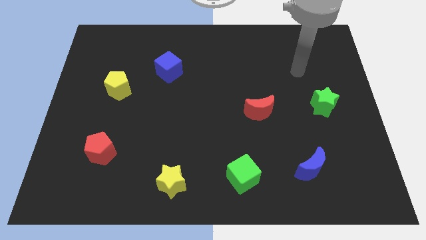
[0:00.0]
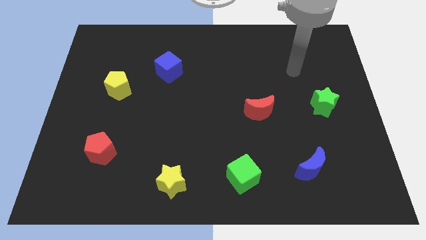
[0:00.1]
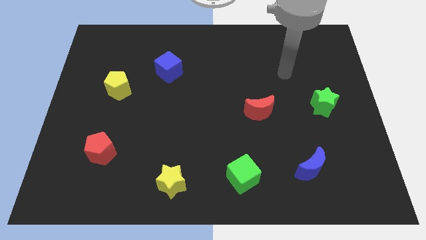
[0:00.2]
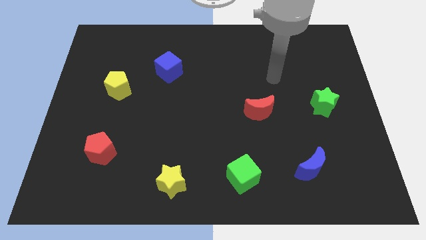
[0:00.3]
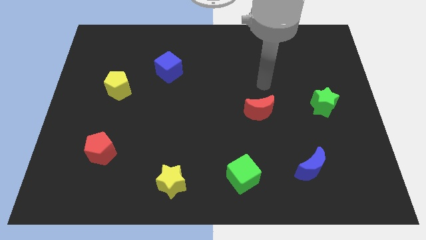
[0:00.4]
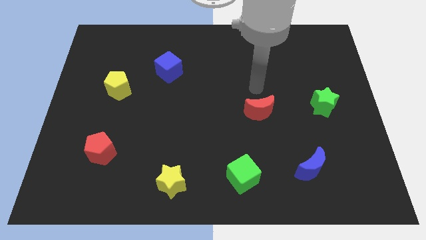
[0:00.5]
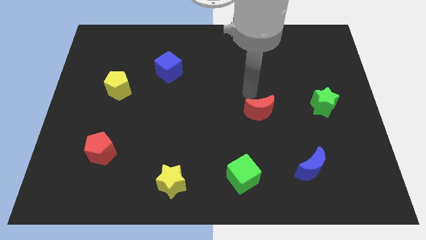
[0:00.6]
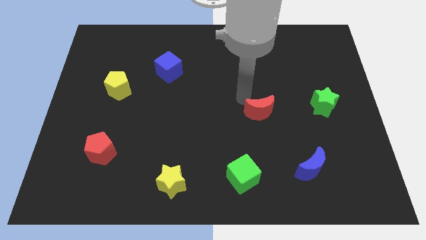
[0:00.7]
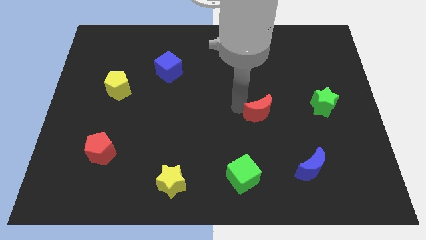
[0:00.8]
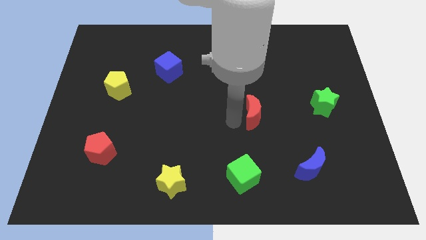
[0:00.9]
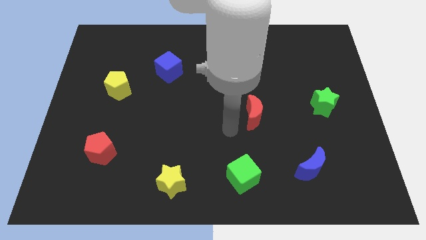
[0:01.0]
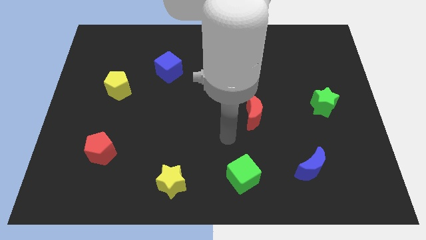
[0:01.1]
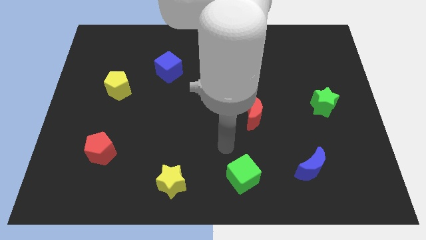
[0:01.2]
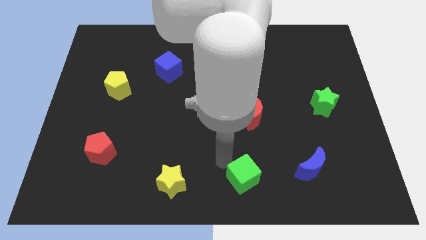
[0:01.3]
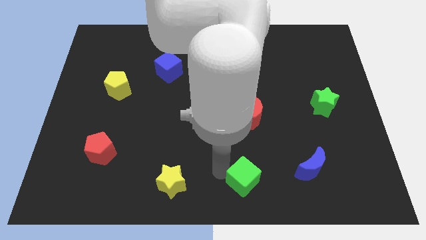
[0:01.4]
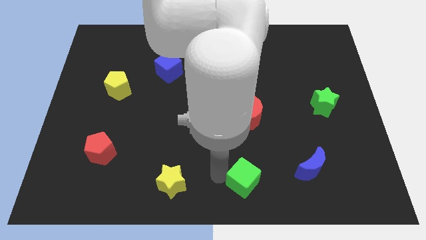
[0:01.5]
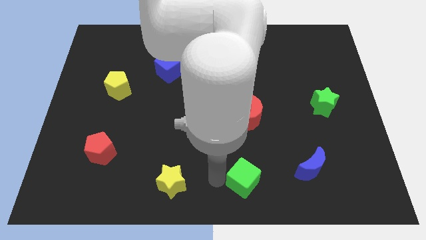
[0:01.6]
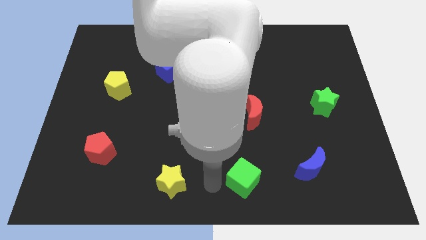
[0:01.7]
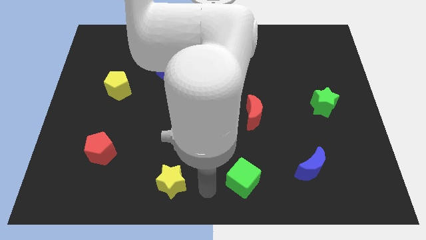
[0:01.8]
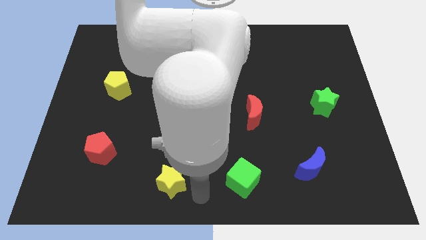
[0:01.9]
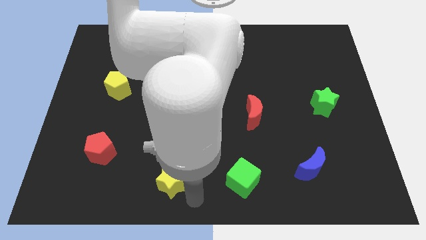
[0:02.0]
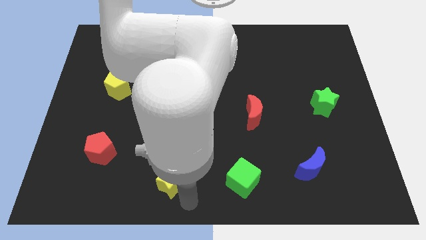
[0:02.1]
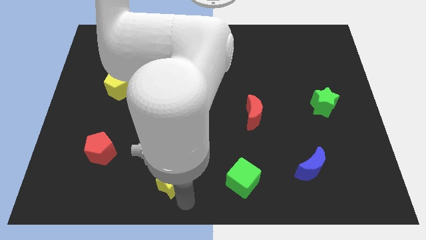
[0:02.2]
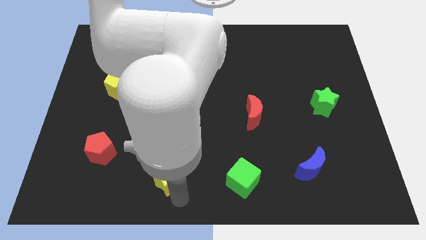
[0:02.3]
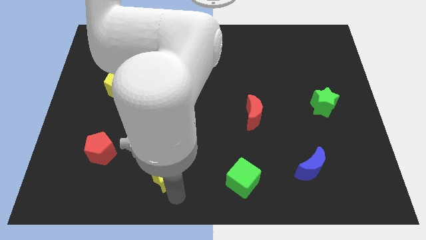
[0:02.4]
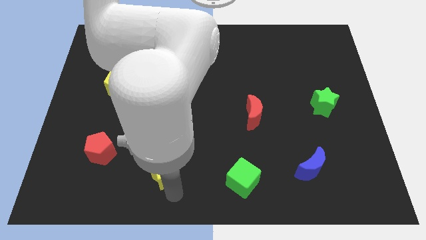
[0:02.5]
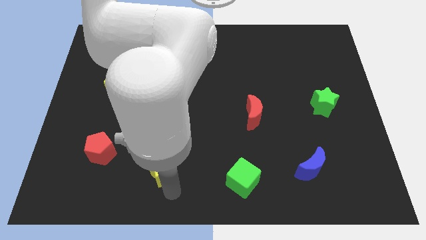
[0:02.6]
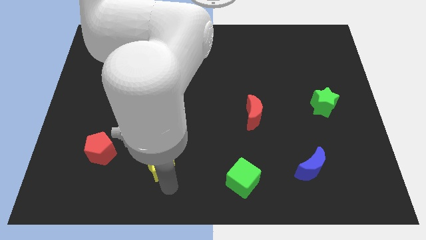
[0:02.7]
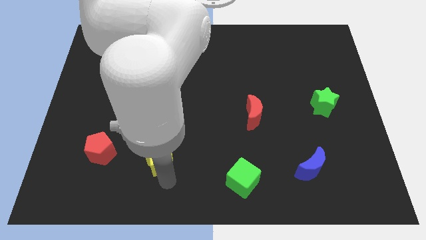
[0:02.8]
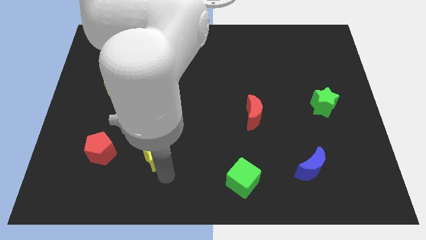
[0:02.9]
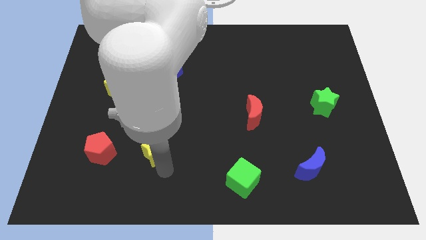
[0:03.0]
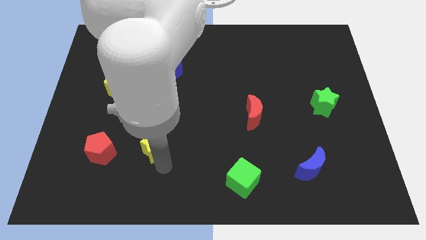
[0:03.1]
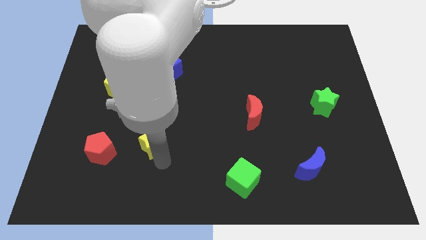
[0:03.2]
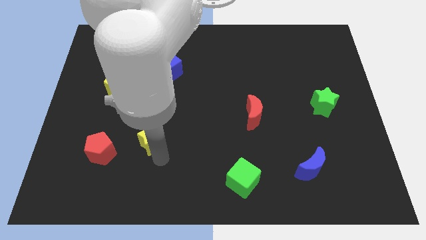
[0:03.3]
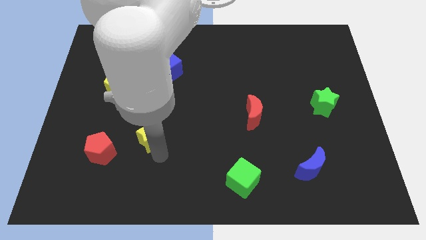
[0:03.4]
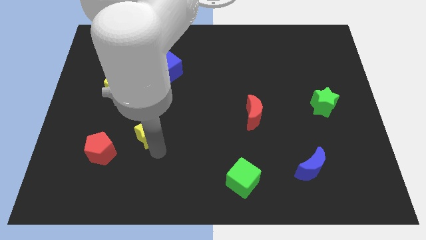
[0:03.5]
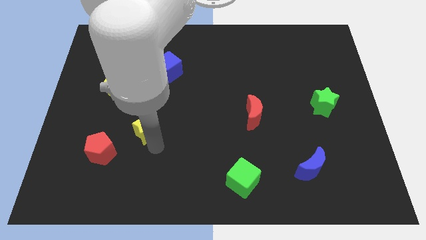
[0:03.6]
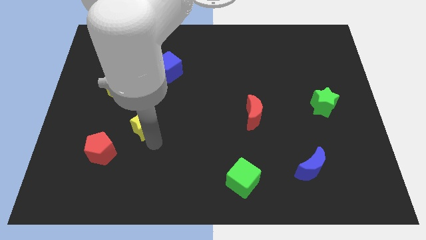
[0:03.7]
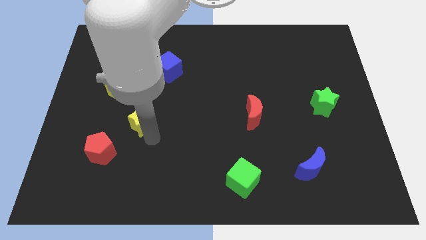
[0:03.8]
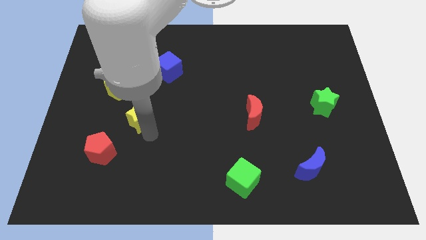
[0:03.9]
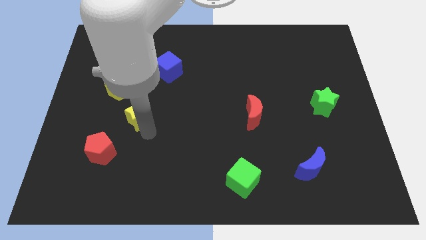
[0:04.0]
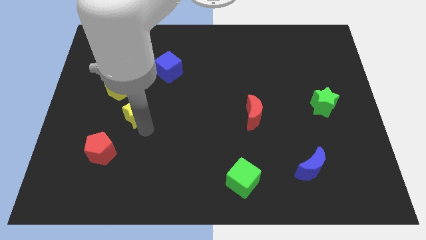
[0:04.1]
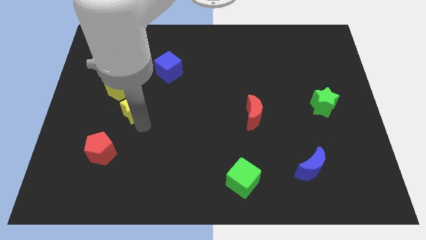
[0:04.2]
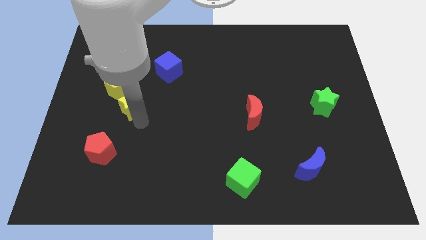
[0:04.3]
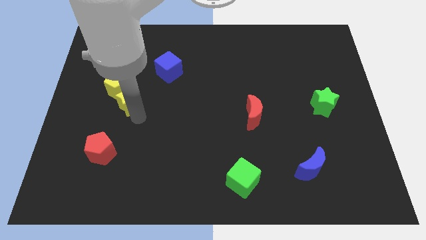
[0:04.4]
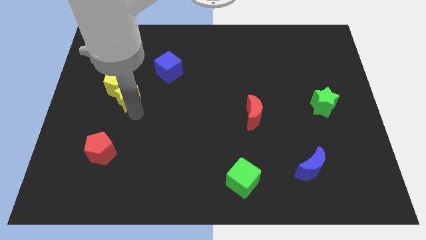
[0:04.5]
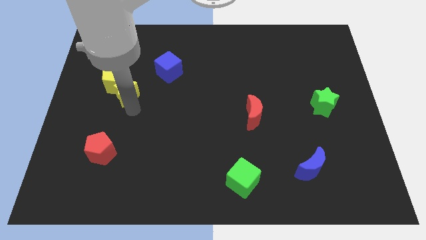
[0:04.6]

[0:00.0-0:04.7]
move the yellow star close to the yellow pentagon

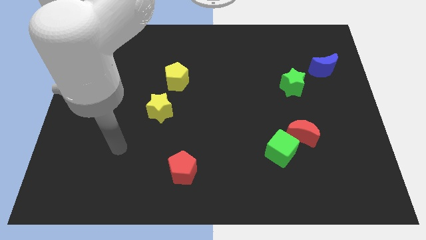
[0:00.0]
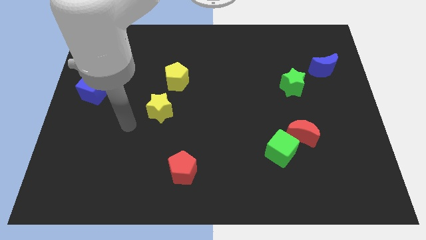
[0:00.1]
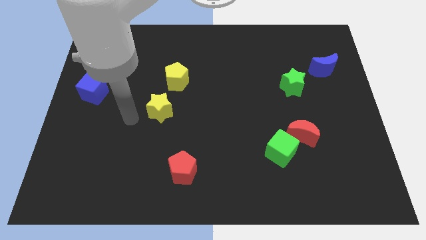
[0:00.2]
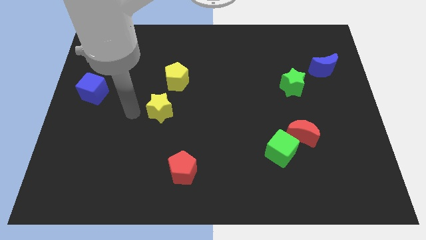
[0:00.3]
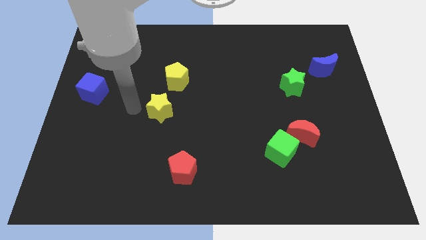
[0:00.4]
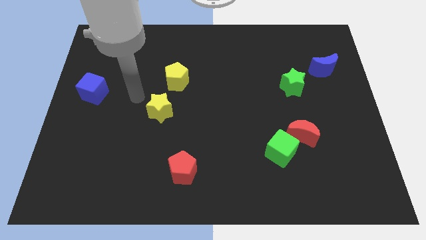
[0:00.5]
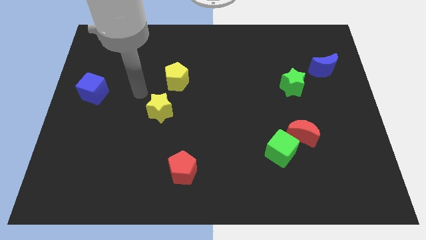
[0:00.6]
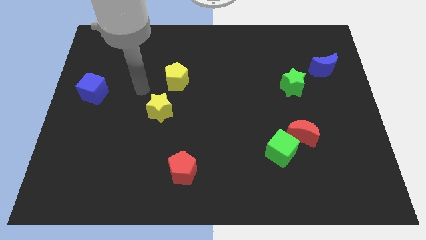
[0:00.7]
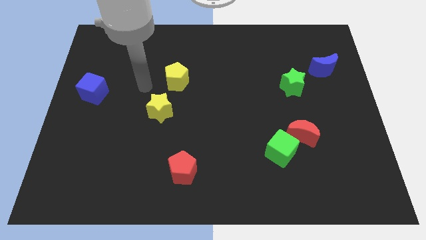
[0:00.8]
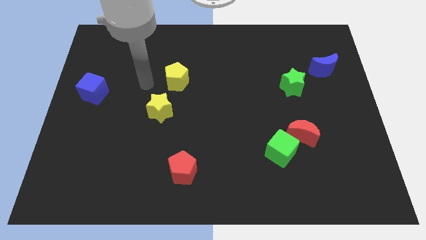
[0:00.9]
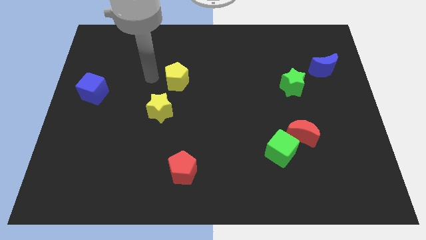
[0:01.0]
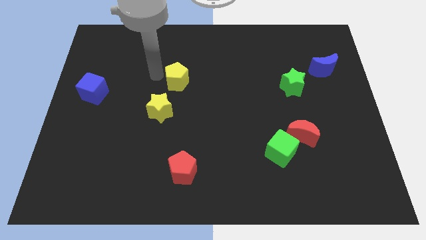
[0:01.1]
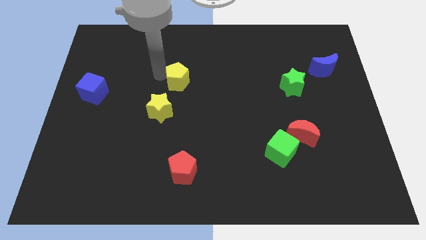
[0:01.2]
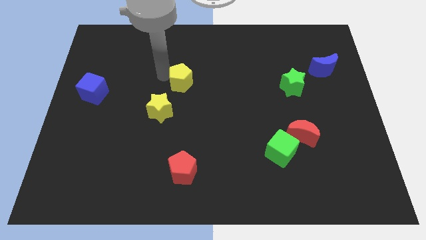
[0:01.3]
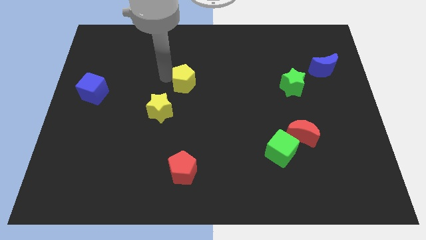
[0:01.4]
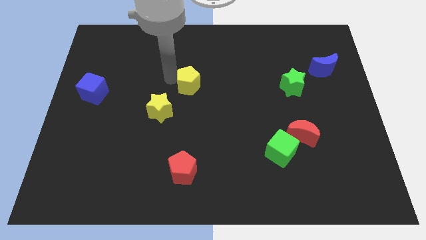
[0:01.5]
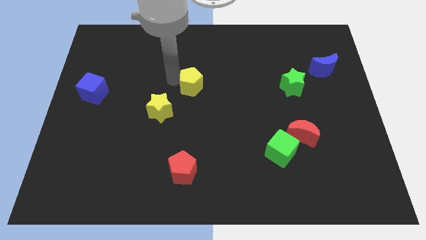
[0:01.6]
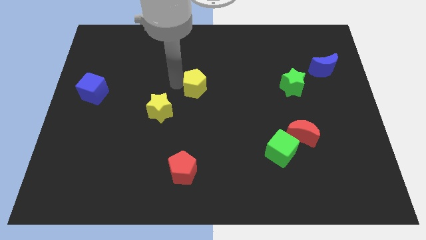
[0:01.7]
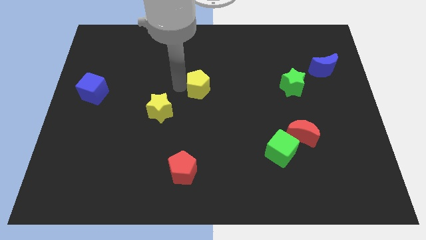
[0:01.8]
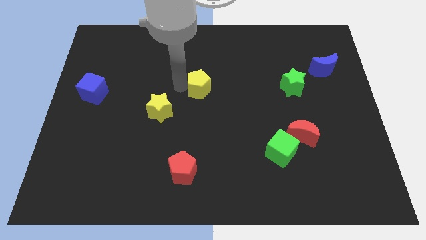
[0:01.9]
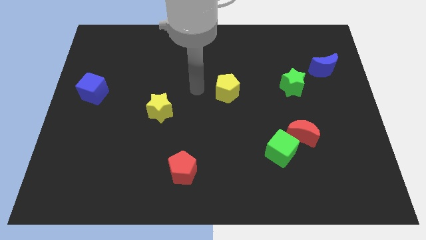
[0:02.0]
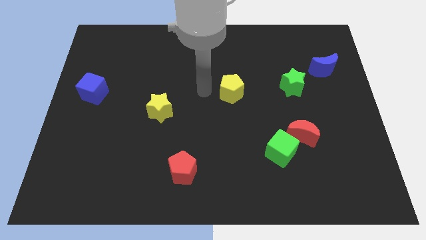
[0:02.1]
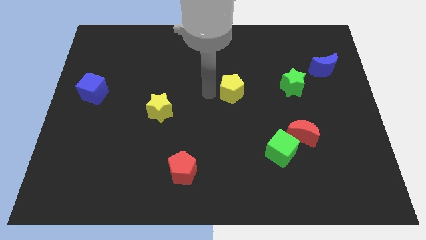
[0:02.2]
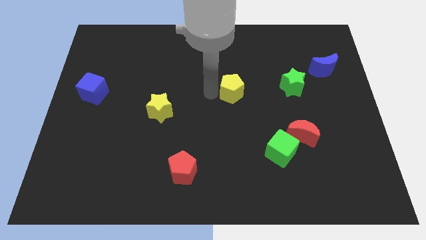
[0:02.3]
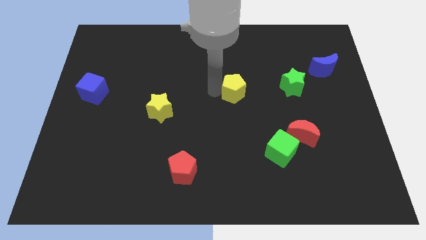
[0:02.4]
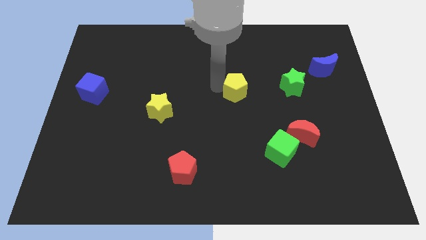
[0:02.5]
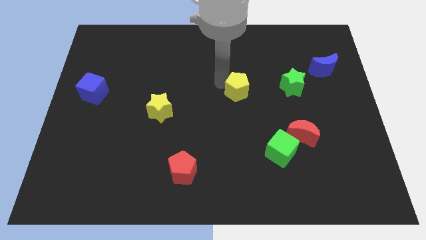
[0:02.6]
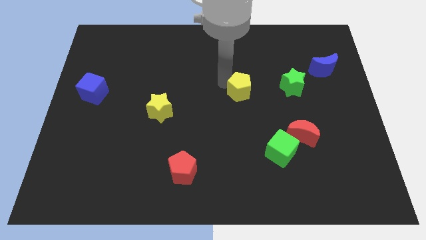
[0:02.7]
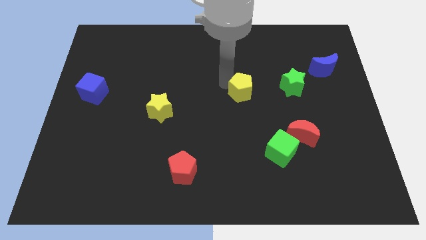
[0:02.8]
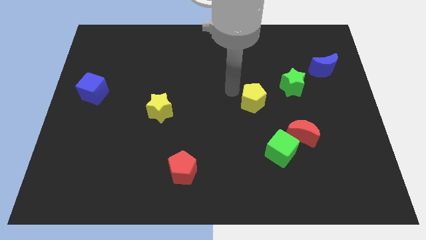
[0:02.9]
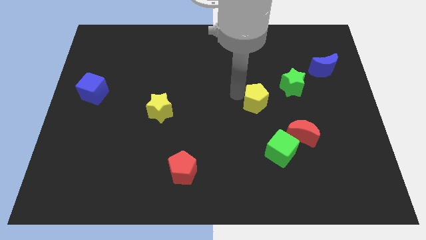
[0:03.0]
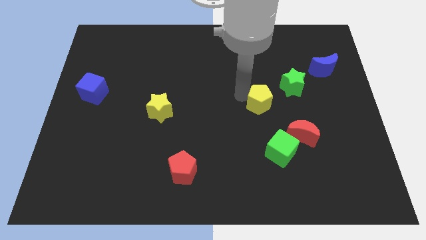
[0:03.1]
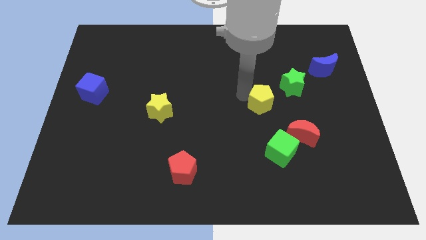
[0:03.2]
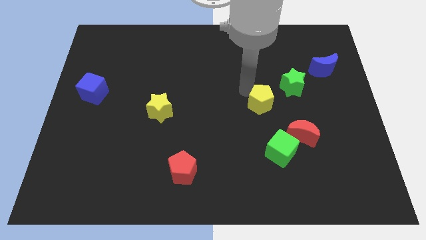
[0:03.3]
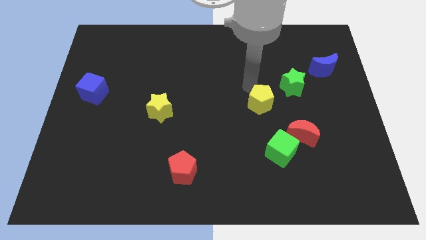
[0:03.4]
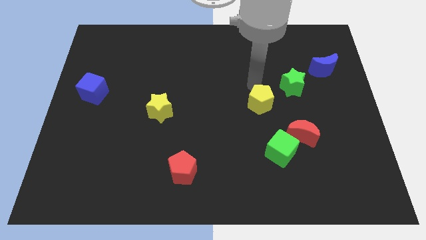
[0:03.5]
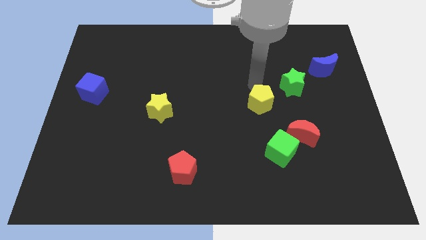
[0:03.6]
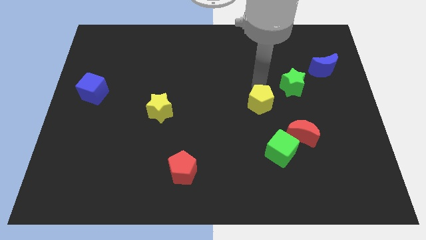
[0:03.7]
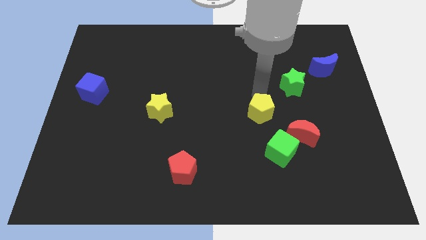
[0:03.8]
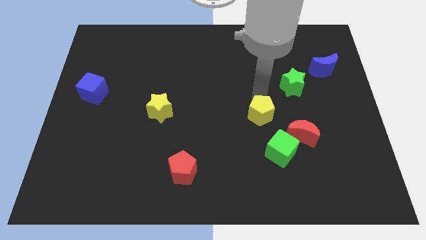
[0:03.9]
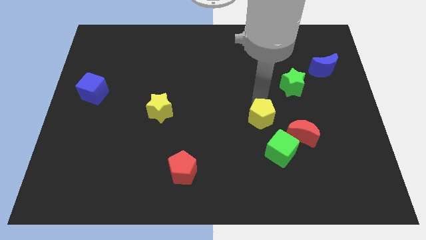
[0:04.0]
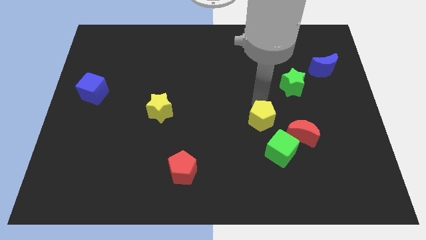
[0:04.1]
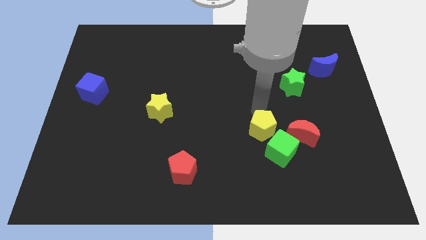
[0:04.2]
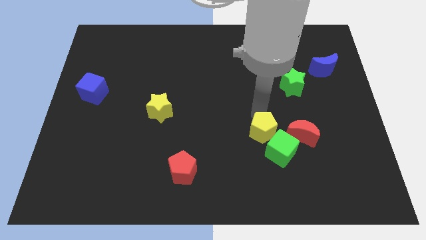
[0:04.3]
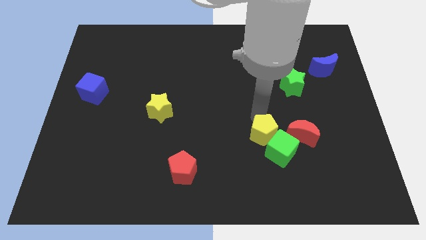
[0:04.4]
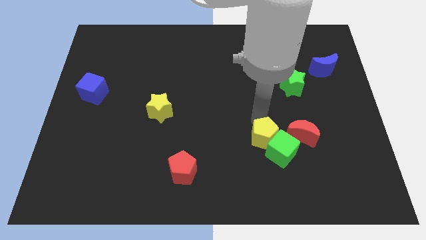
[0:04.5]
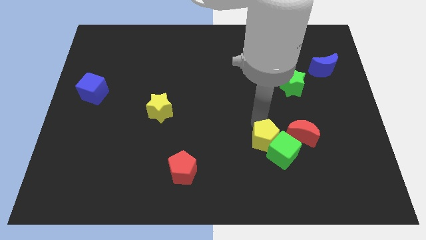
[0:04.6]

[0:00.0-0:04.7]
slide the yellow pentagon to the green cube
